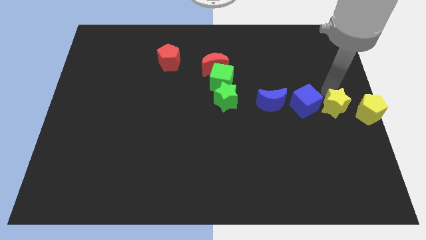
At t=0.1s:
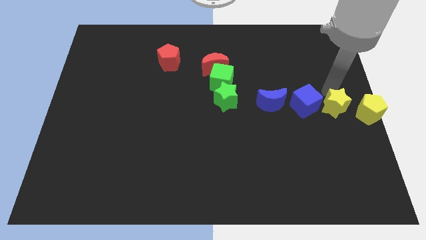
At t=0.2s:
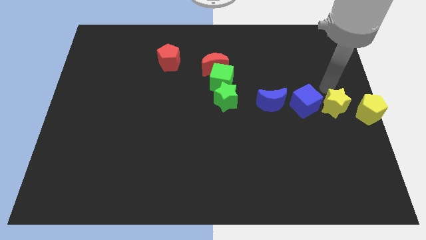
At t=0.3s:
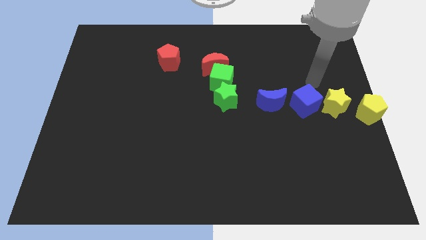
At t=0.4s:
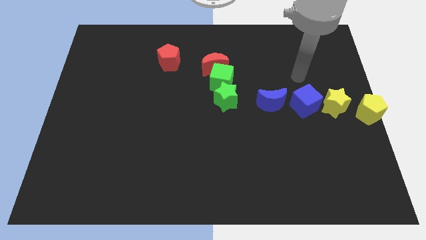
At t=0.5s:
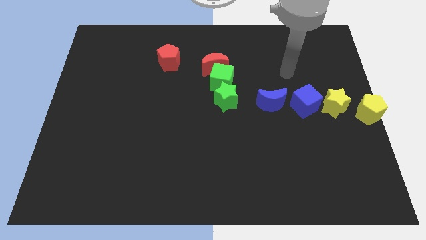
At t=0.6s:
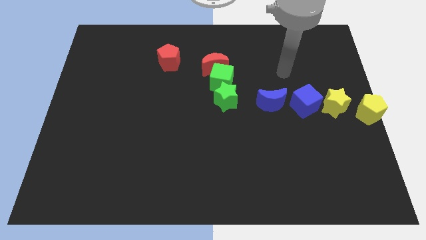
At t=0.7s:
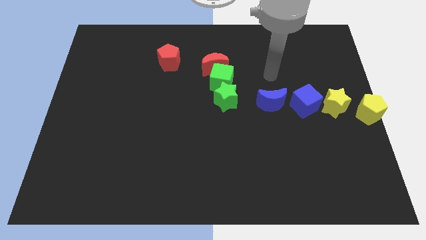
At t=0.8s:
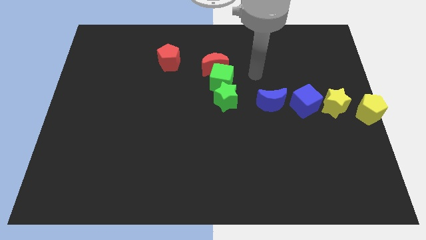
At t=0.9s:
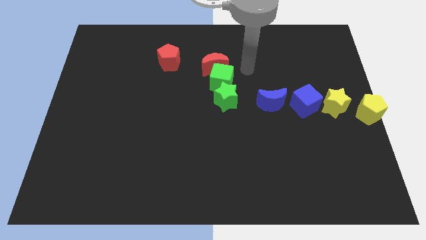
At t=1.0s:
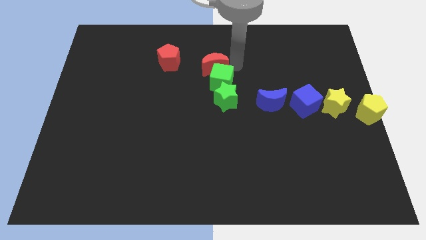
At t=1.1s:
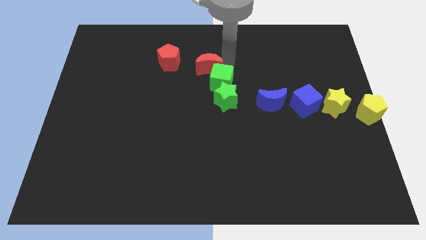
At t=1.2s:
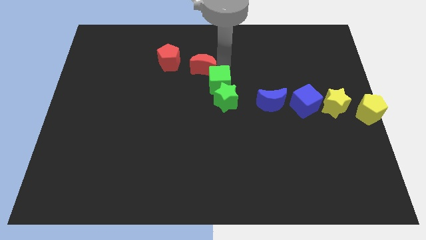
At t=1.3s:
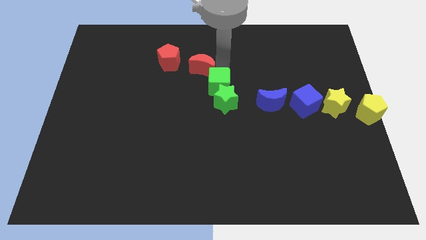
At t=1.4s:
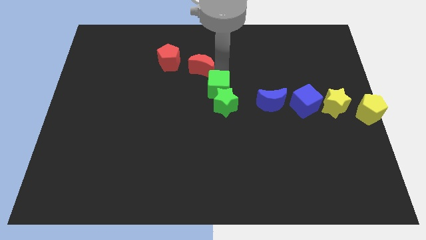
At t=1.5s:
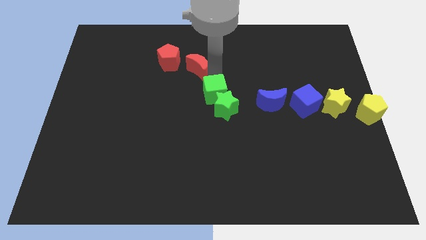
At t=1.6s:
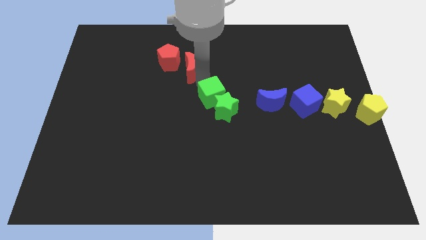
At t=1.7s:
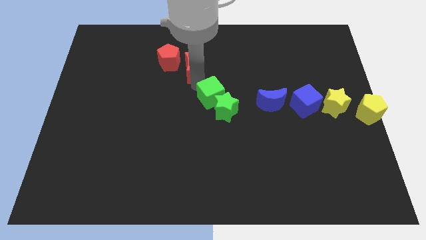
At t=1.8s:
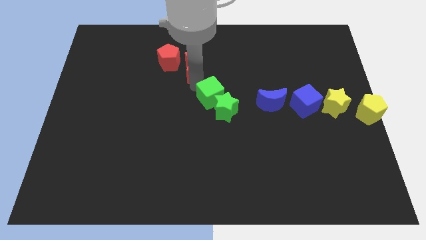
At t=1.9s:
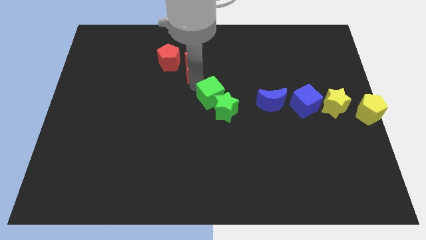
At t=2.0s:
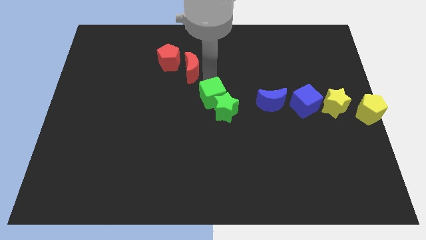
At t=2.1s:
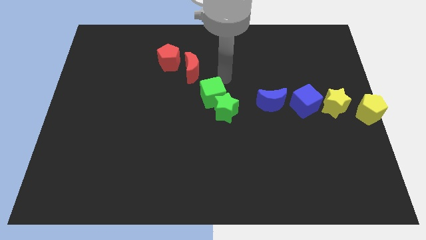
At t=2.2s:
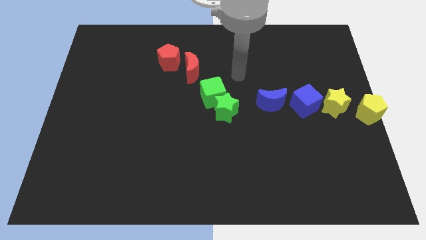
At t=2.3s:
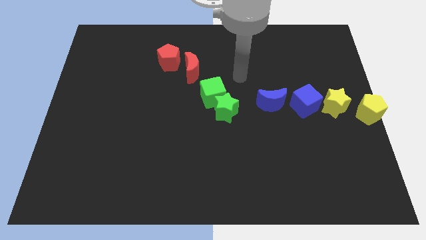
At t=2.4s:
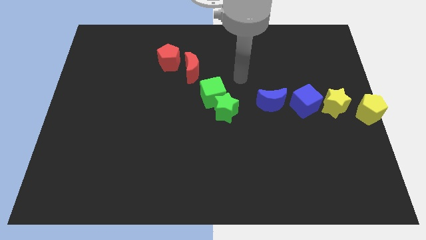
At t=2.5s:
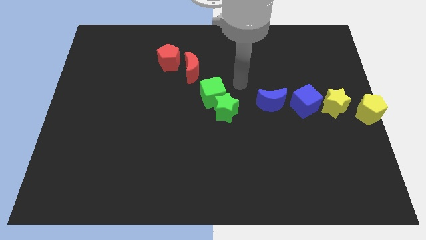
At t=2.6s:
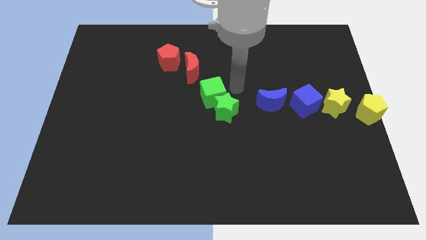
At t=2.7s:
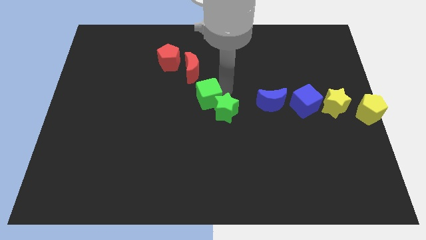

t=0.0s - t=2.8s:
separate the green cube and red moon

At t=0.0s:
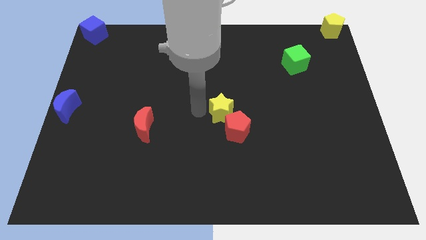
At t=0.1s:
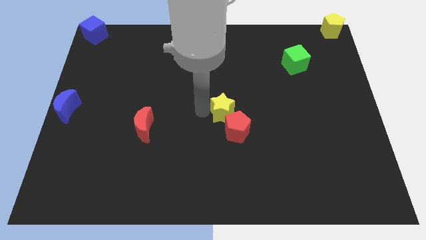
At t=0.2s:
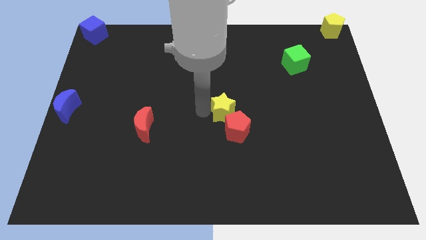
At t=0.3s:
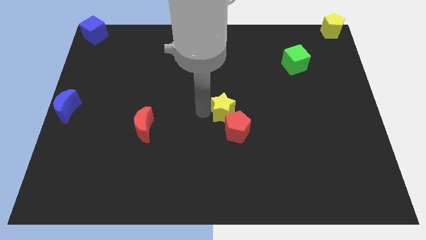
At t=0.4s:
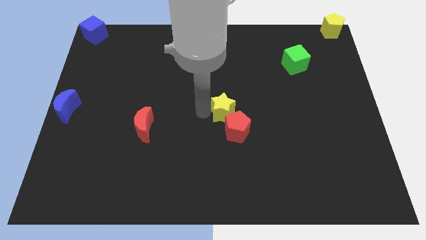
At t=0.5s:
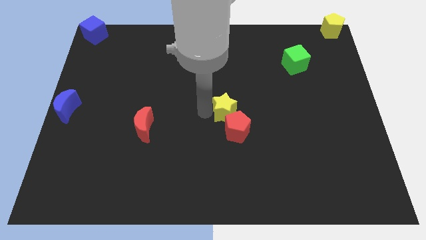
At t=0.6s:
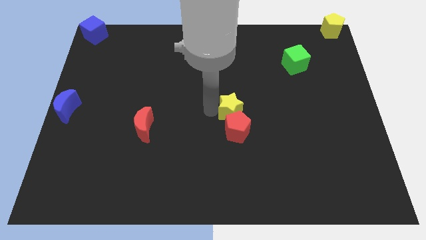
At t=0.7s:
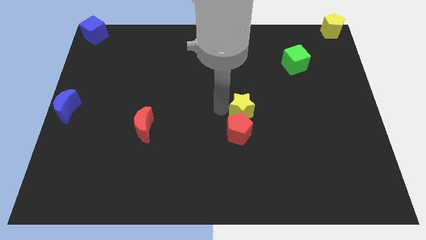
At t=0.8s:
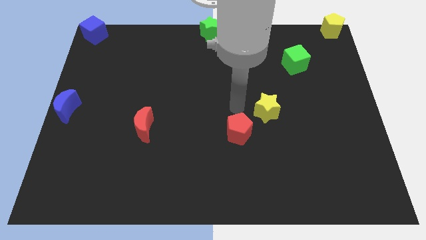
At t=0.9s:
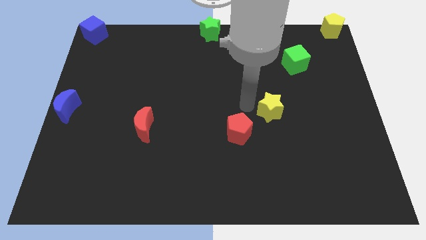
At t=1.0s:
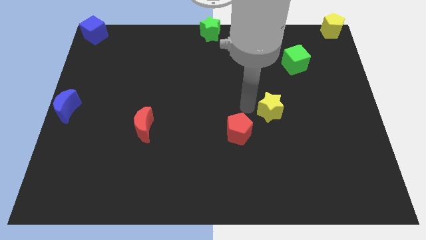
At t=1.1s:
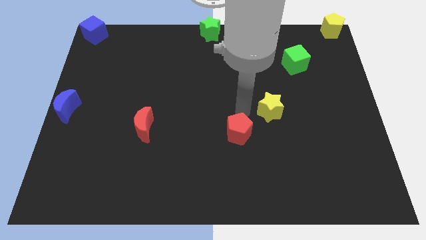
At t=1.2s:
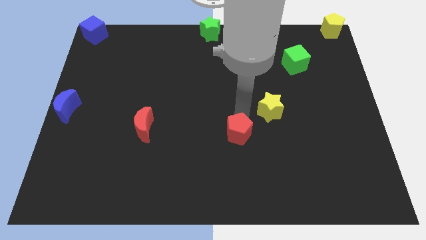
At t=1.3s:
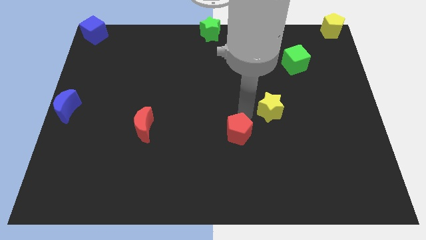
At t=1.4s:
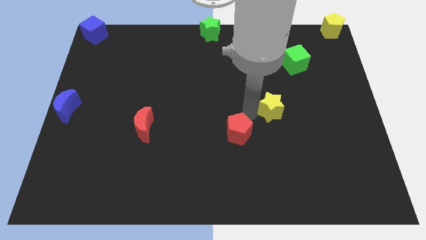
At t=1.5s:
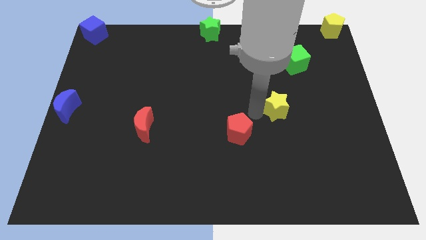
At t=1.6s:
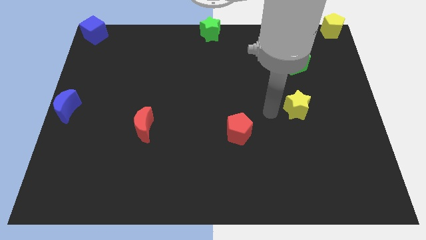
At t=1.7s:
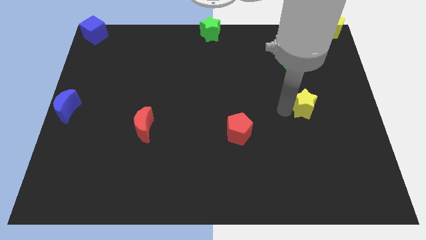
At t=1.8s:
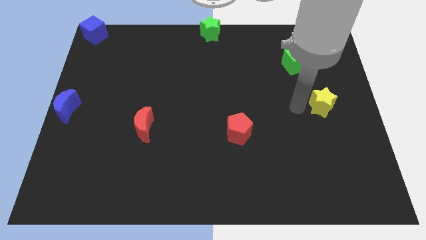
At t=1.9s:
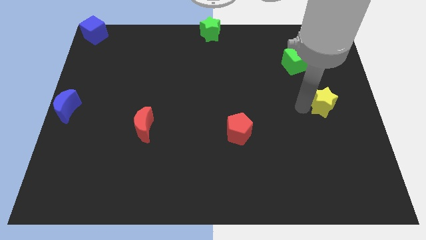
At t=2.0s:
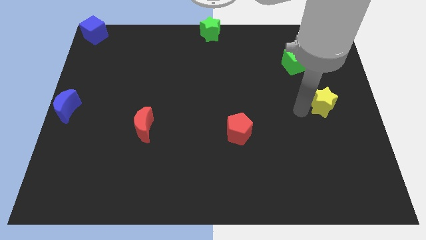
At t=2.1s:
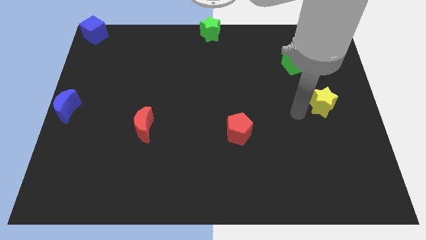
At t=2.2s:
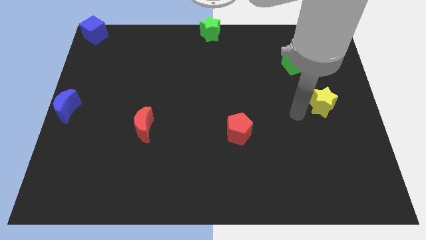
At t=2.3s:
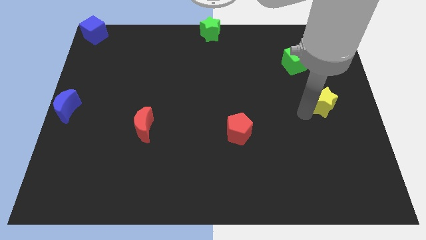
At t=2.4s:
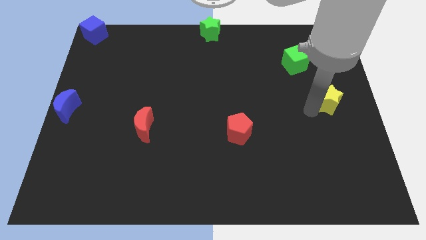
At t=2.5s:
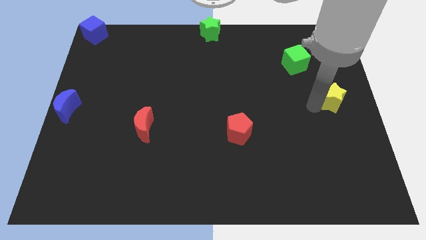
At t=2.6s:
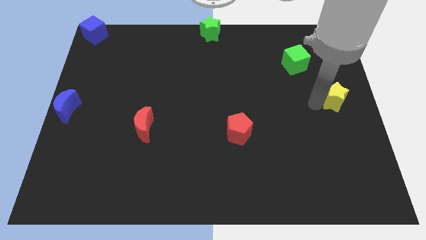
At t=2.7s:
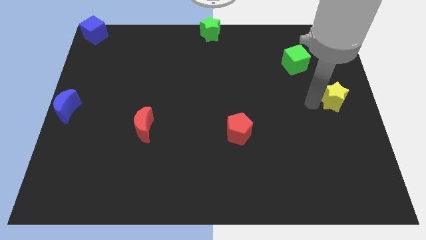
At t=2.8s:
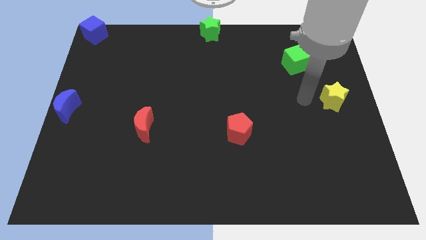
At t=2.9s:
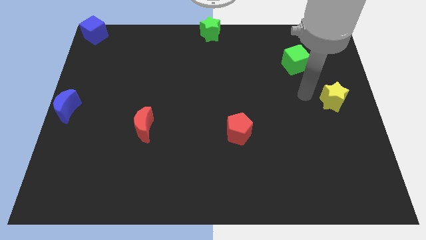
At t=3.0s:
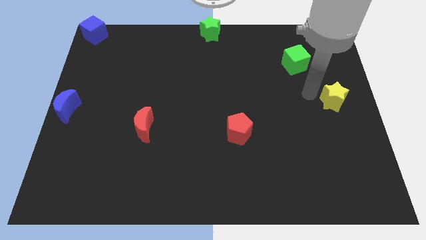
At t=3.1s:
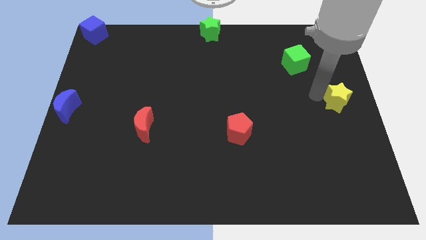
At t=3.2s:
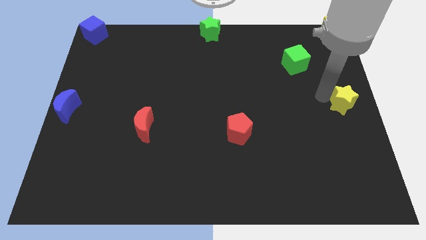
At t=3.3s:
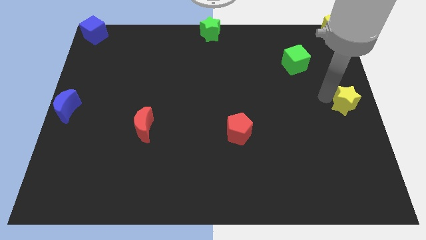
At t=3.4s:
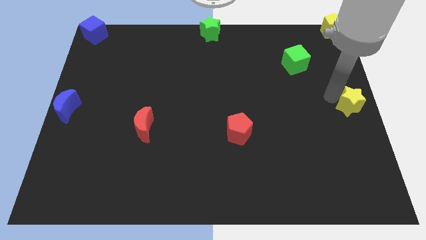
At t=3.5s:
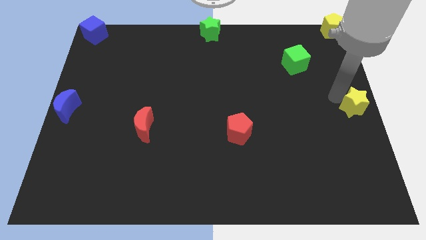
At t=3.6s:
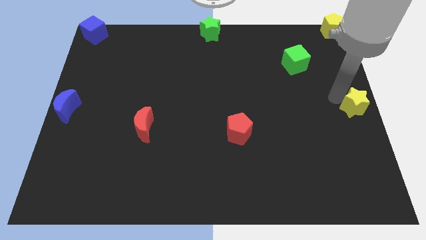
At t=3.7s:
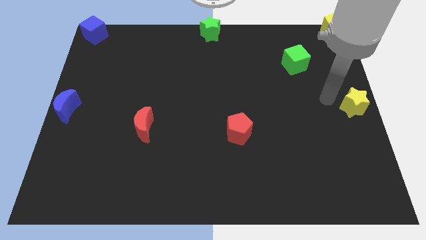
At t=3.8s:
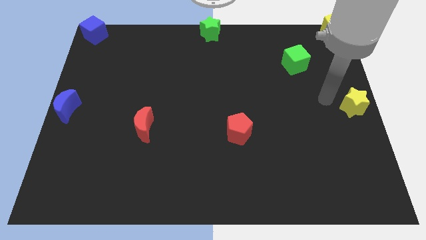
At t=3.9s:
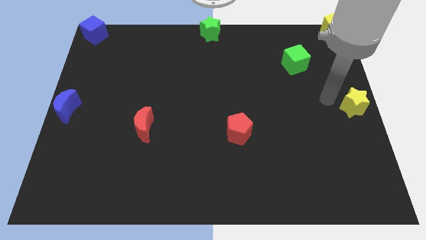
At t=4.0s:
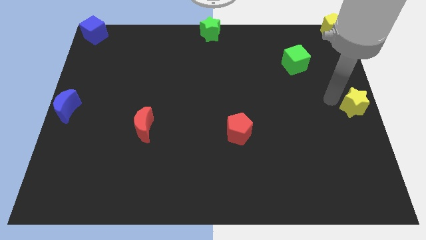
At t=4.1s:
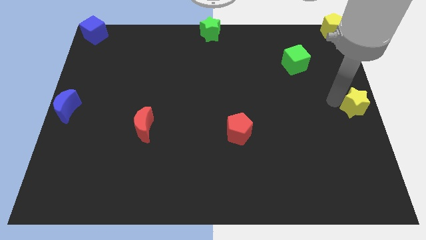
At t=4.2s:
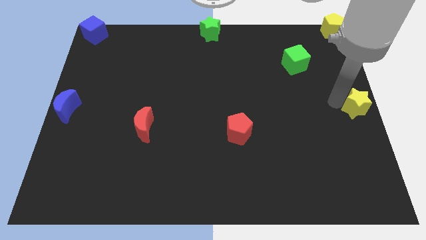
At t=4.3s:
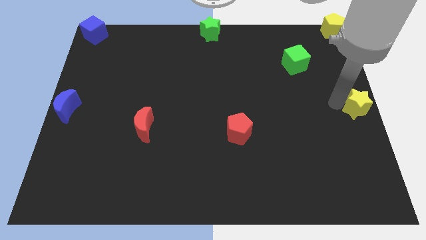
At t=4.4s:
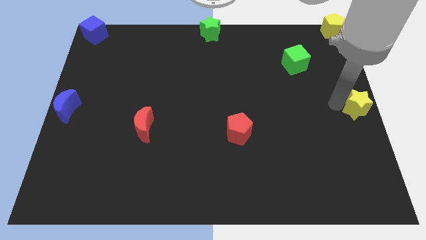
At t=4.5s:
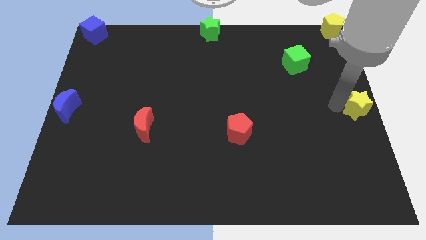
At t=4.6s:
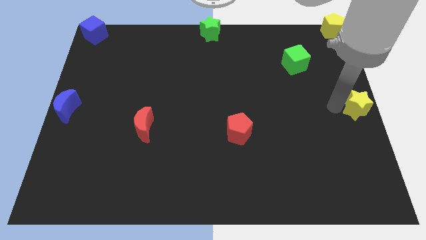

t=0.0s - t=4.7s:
drag yellow star towards middle right of the board

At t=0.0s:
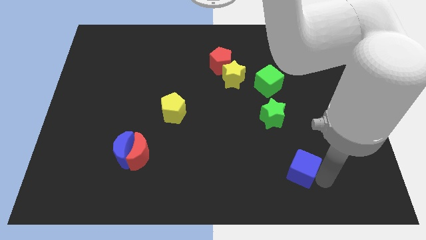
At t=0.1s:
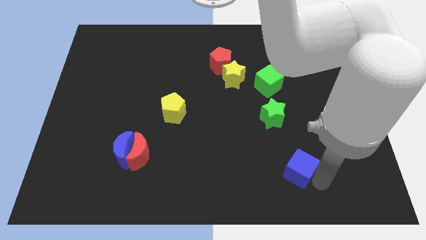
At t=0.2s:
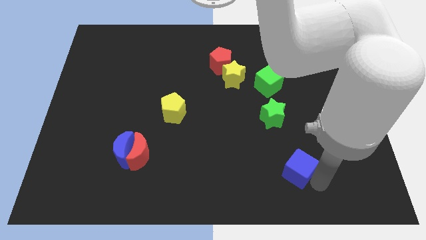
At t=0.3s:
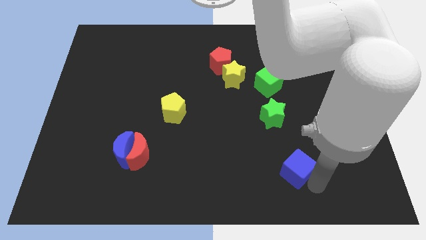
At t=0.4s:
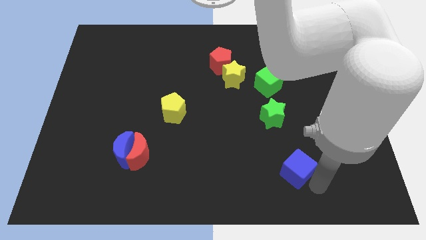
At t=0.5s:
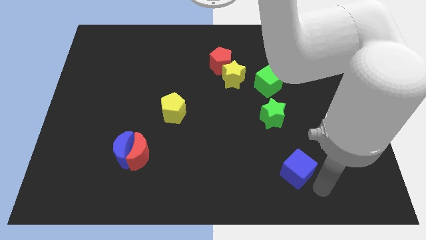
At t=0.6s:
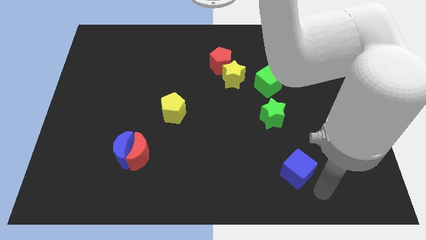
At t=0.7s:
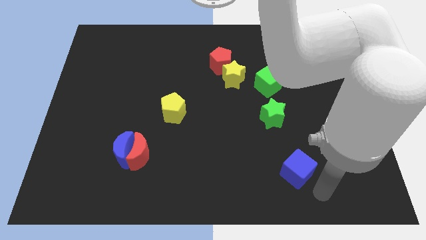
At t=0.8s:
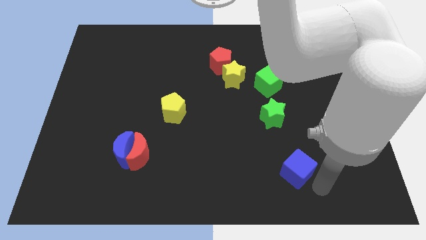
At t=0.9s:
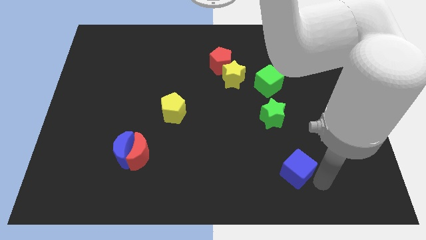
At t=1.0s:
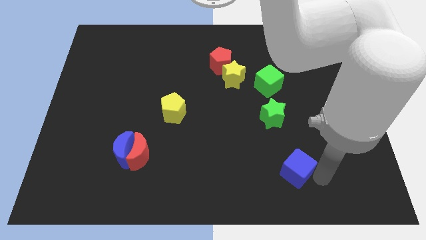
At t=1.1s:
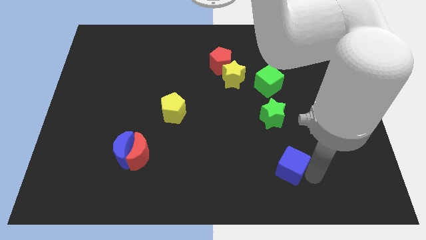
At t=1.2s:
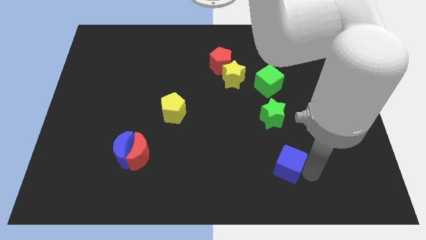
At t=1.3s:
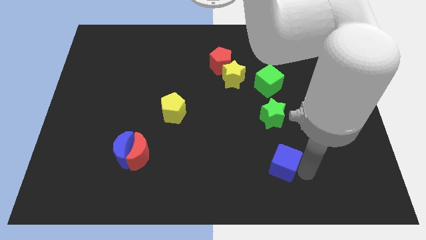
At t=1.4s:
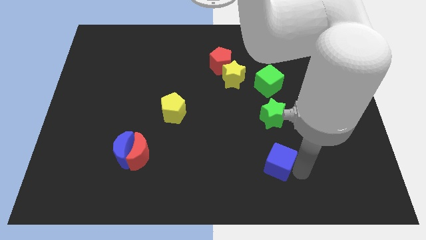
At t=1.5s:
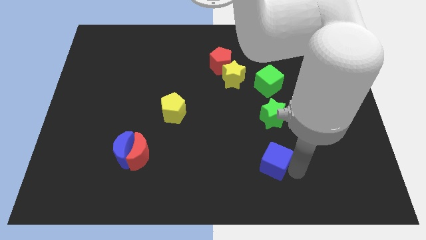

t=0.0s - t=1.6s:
push the blue cube to the bottom of the green star
